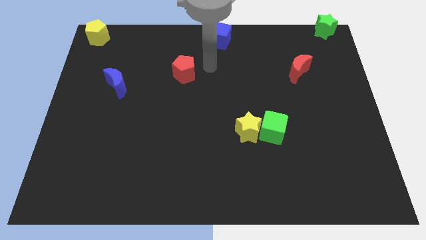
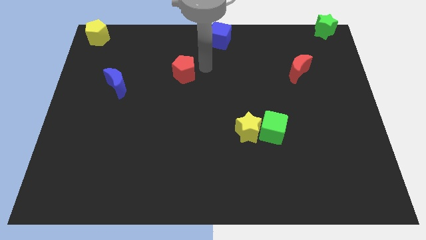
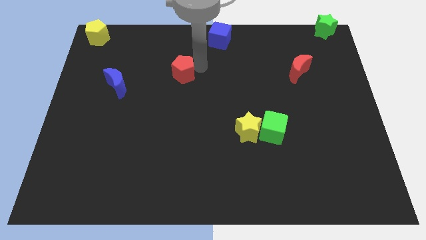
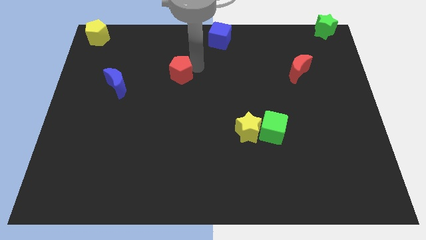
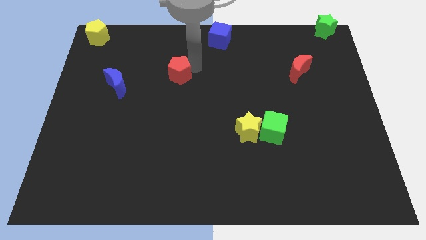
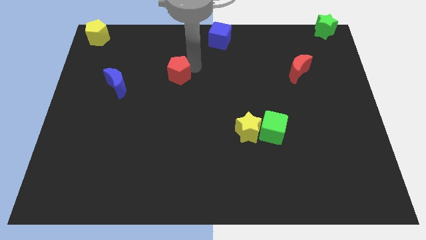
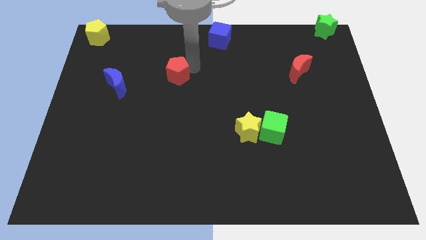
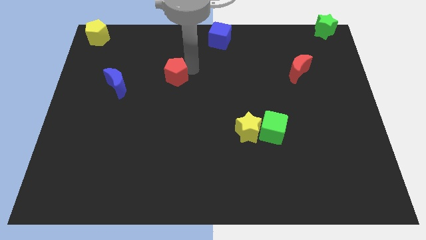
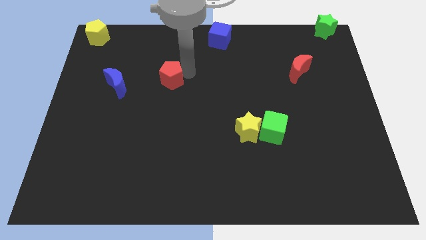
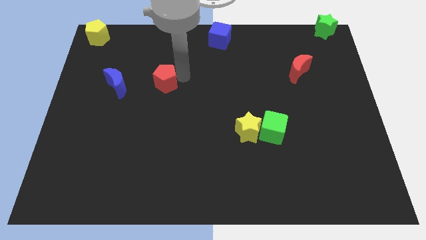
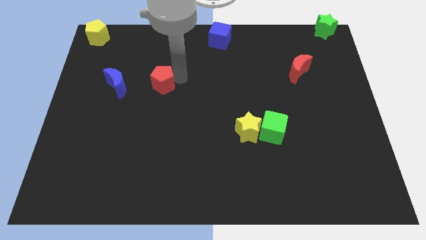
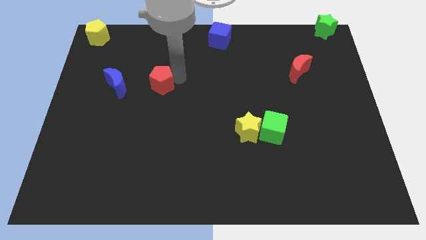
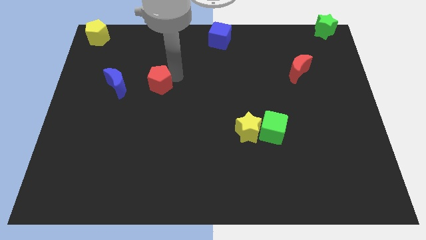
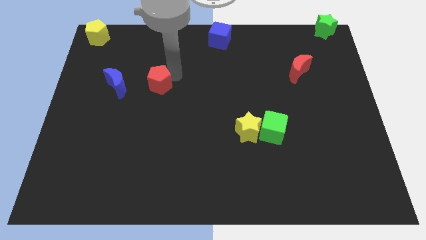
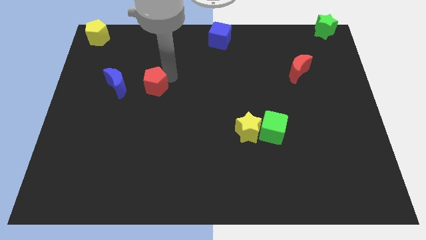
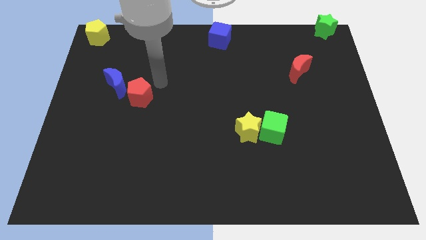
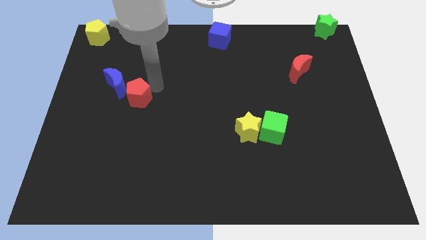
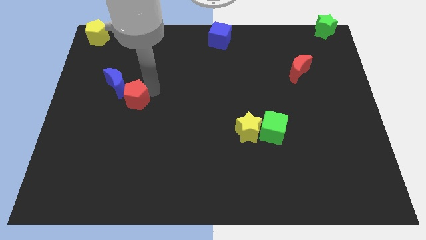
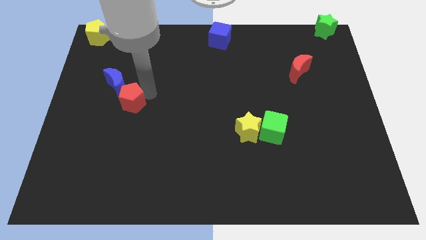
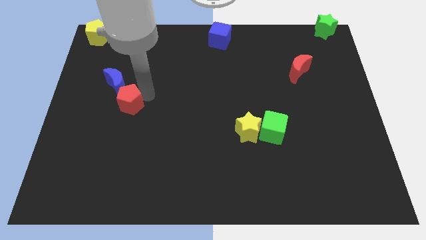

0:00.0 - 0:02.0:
push the red pentagon near blue moon

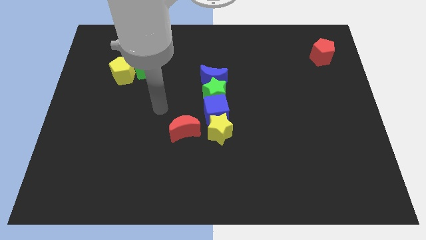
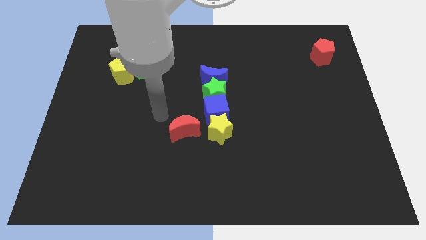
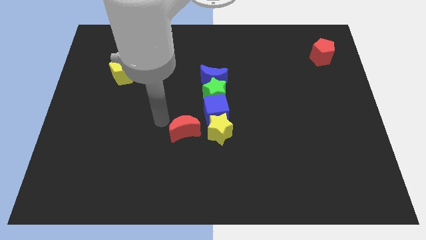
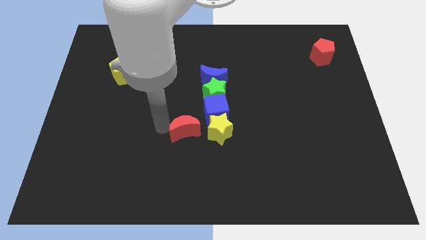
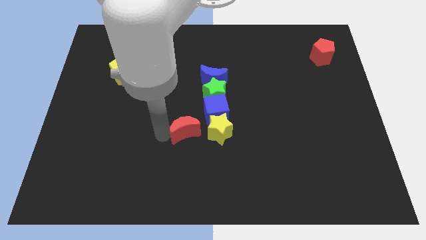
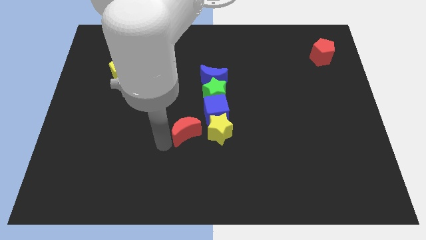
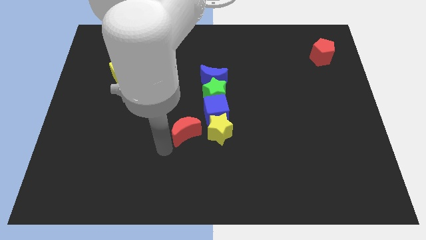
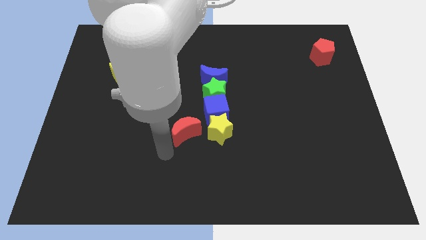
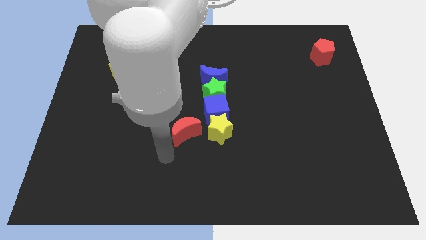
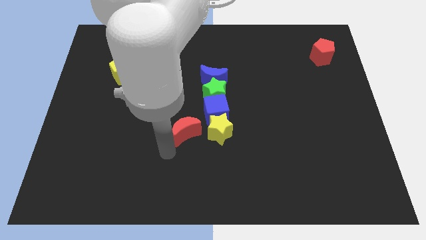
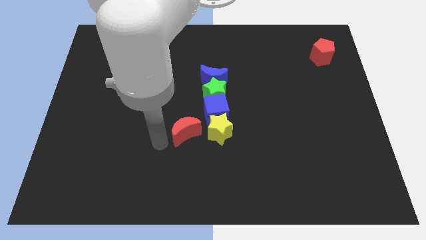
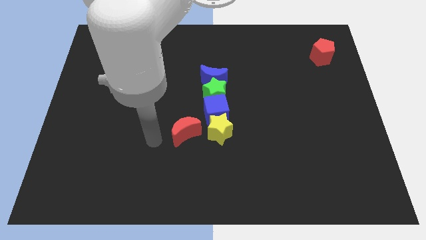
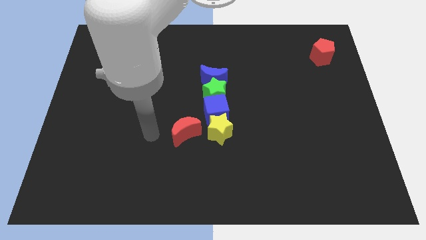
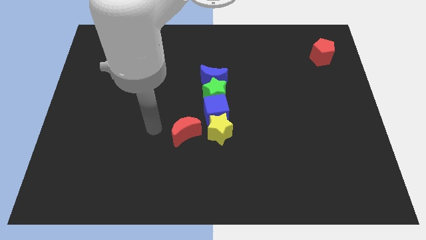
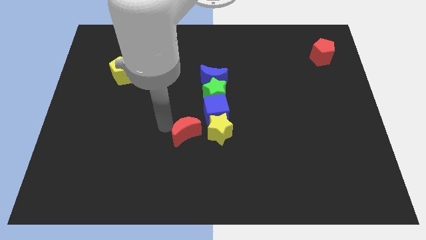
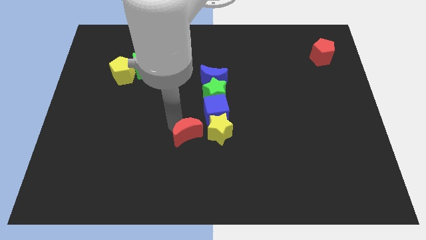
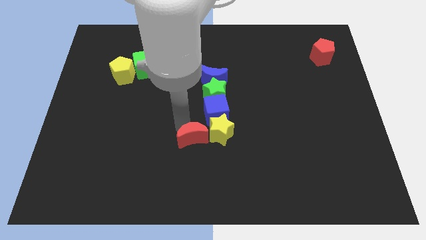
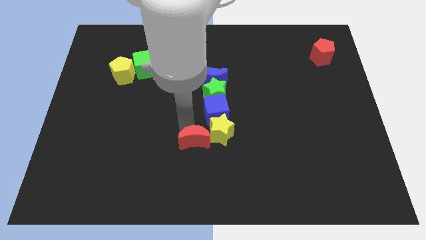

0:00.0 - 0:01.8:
drag the red crescent into the left side of the yellow star

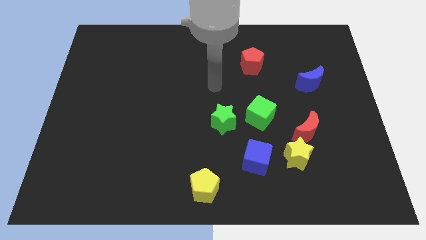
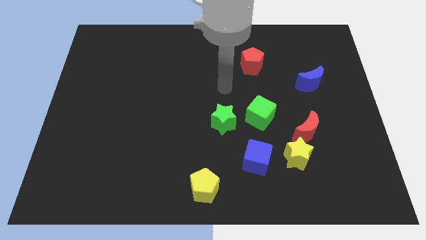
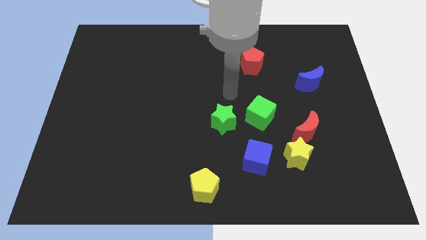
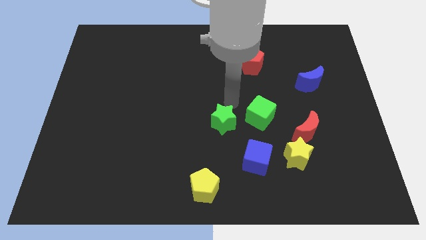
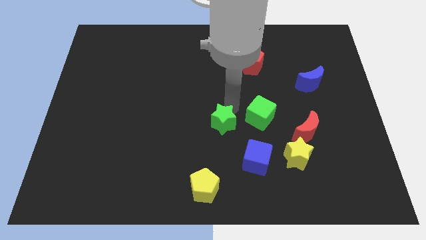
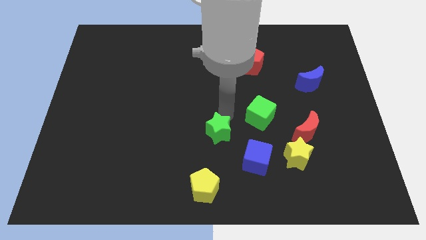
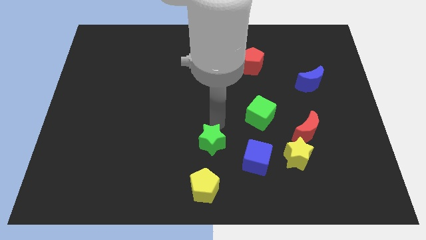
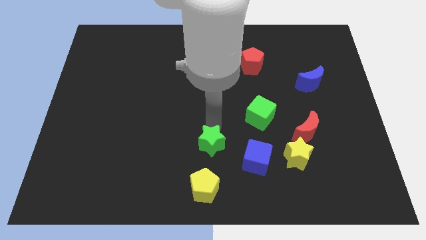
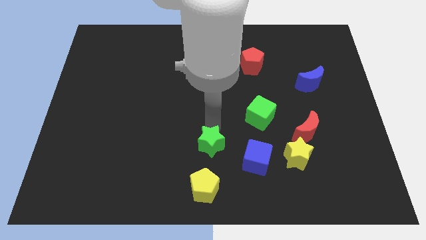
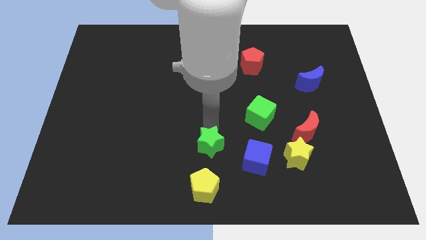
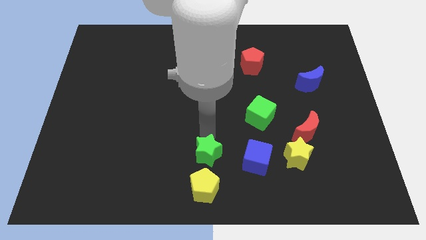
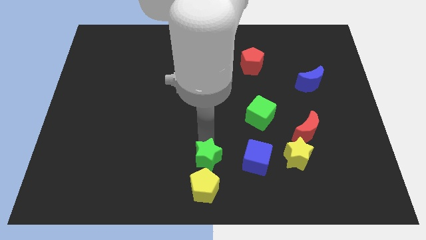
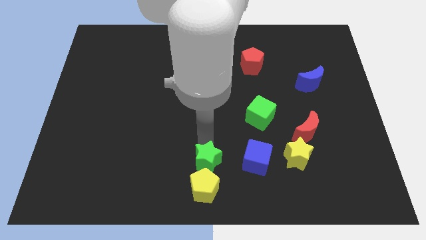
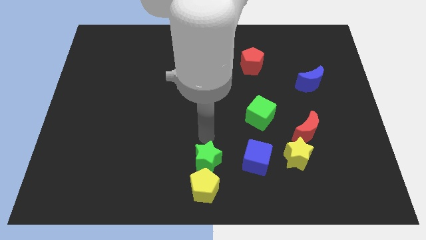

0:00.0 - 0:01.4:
push the green star on top of the yellow pentagon

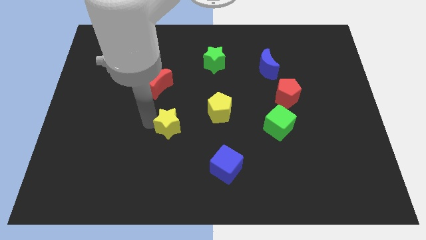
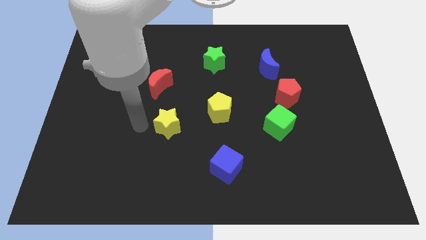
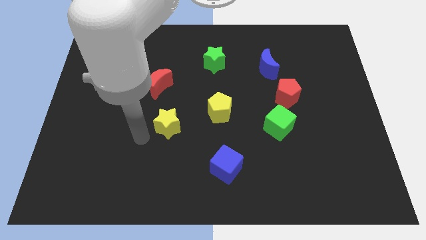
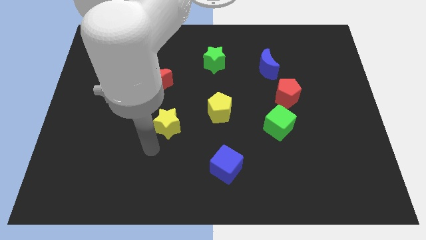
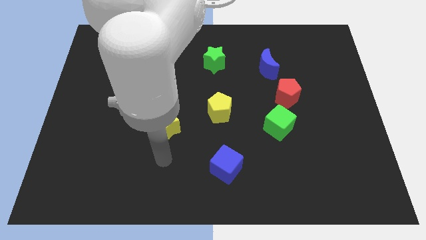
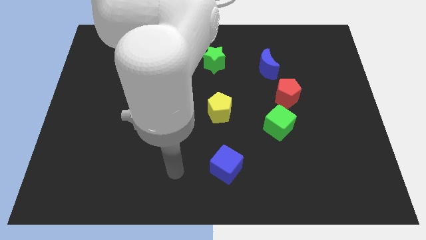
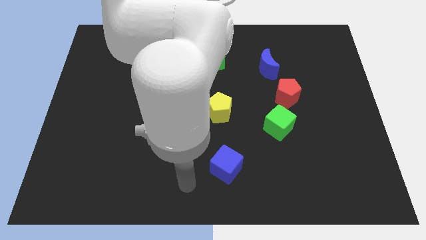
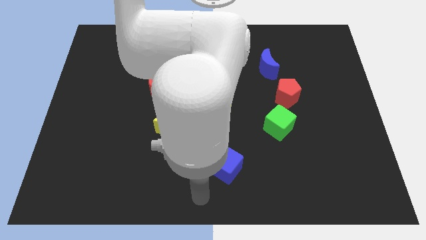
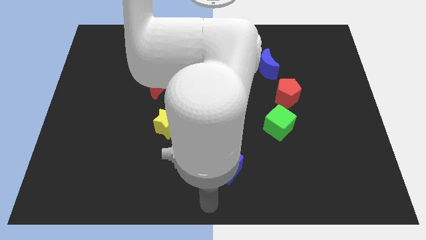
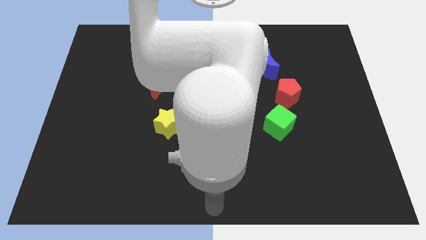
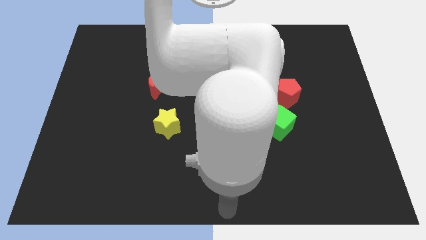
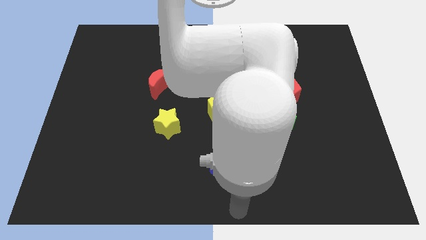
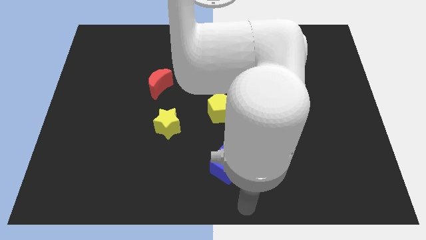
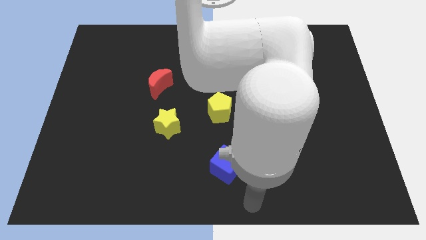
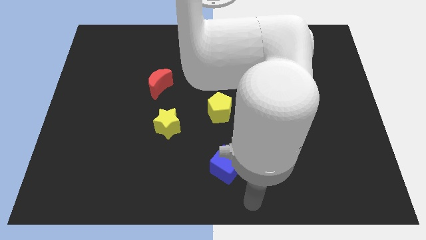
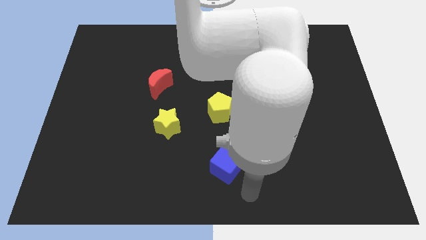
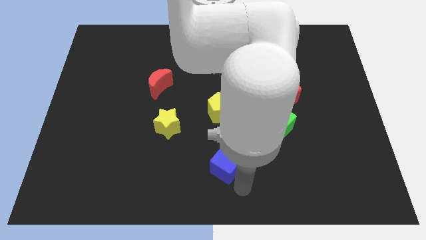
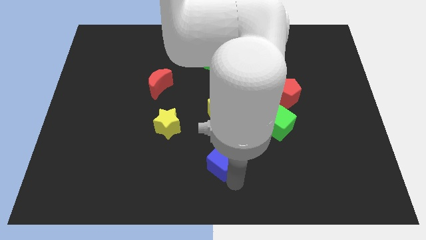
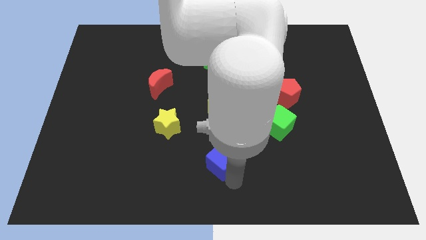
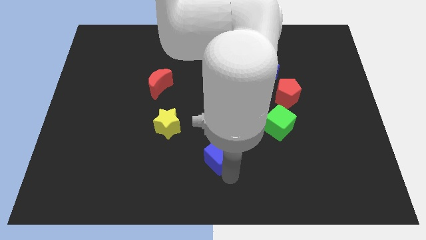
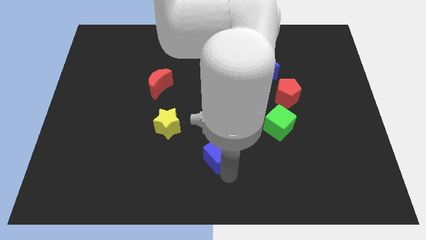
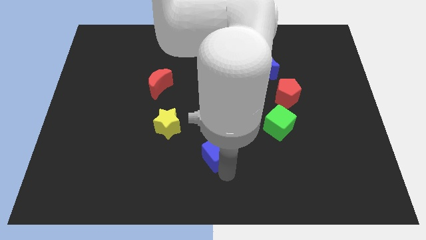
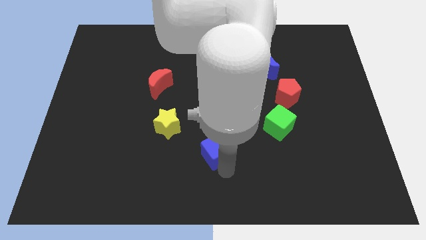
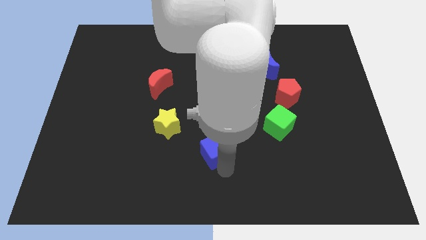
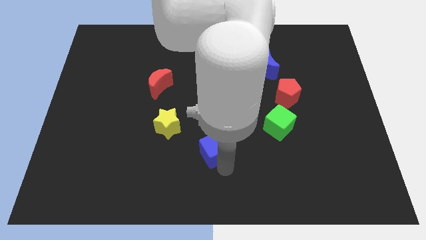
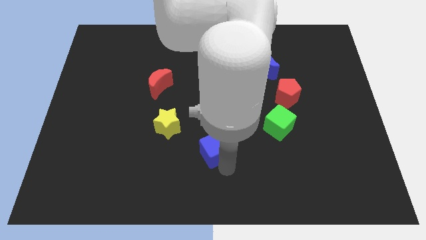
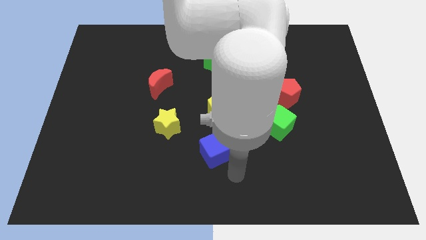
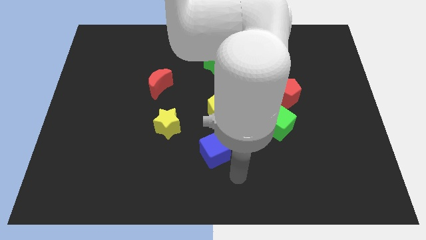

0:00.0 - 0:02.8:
drag the blue cube slightly to the top side of the board

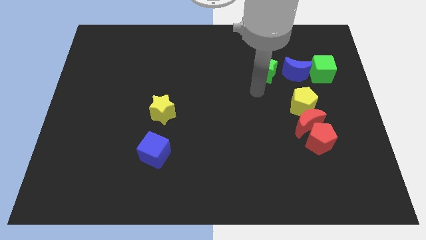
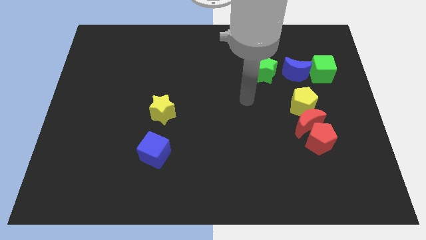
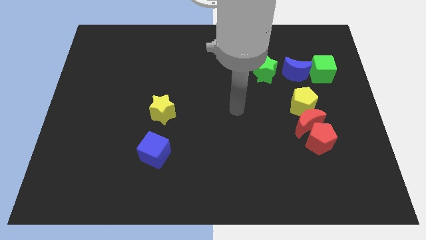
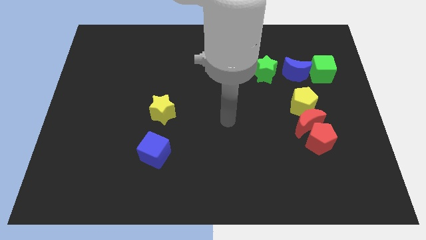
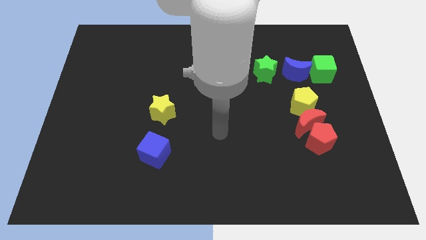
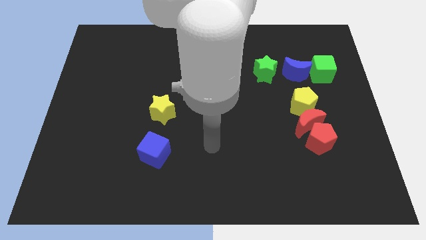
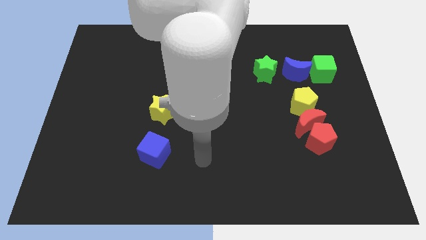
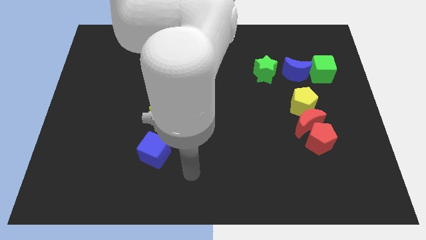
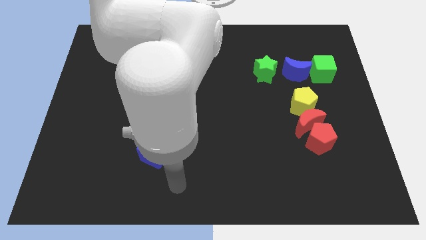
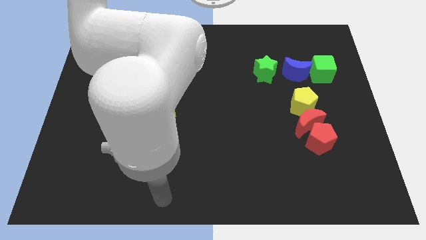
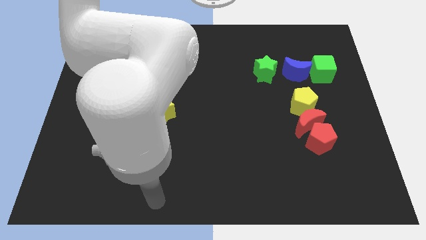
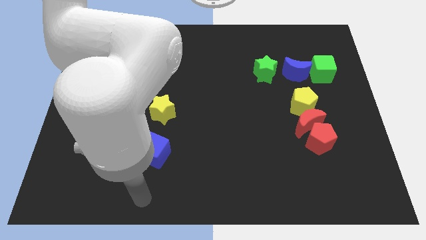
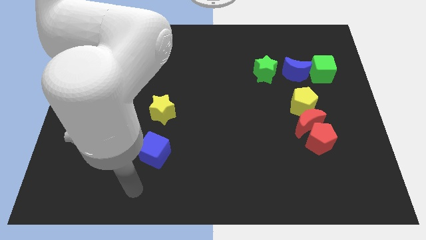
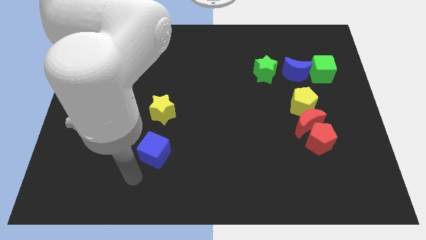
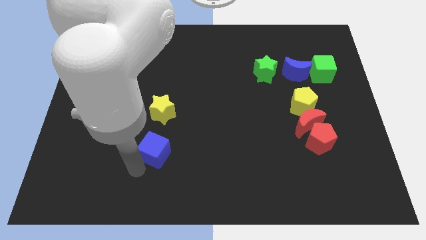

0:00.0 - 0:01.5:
move your arm towards the bottom of the blue cube
